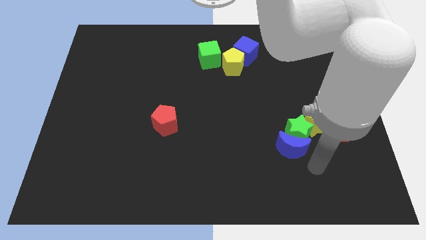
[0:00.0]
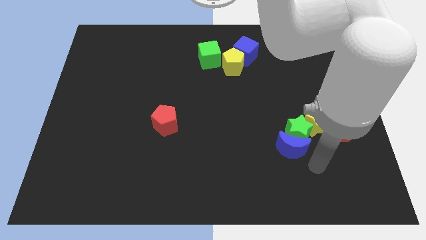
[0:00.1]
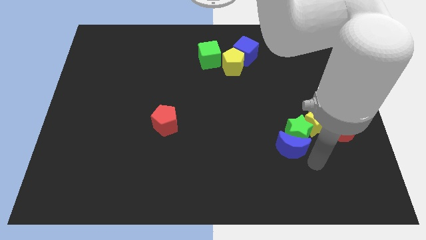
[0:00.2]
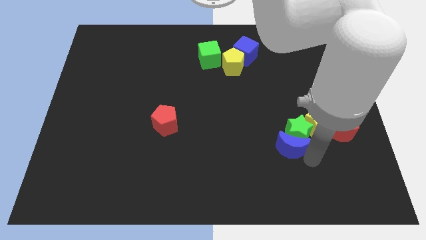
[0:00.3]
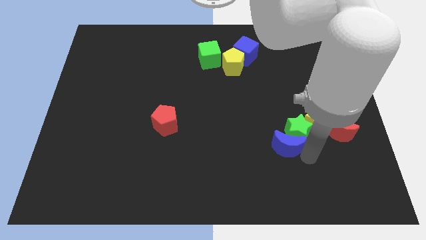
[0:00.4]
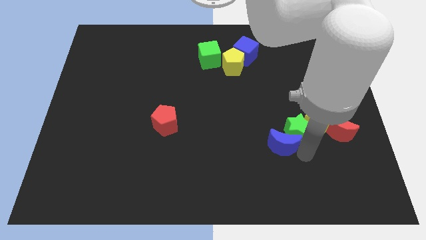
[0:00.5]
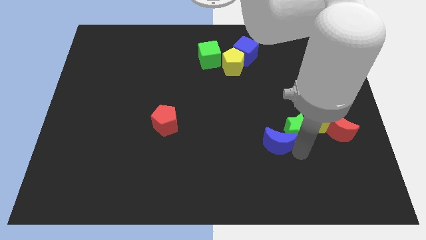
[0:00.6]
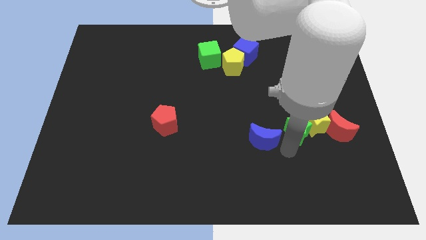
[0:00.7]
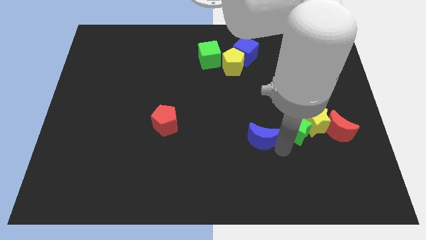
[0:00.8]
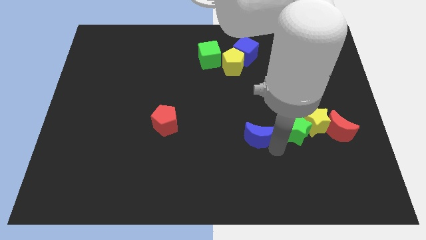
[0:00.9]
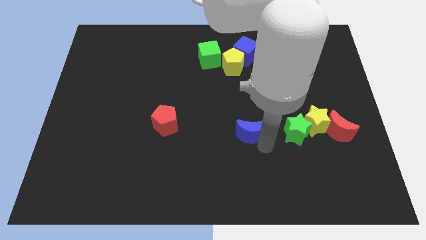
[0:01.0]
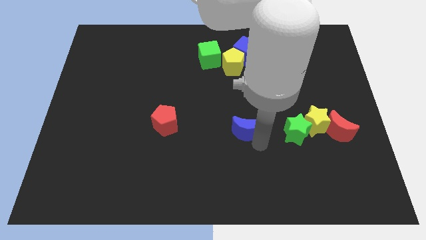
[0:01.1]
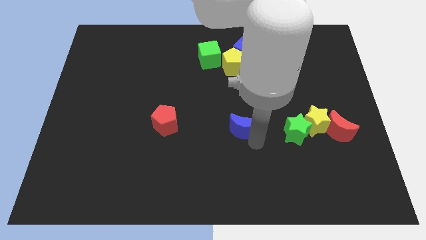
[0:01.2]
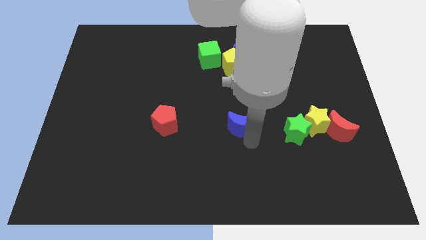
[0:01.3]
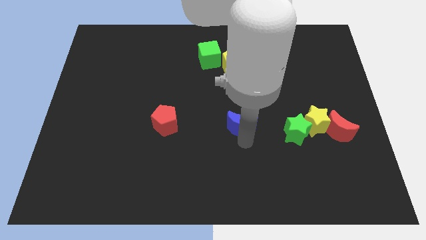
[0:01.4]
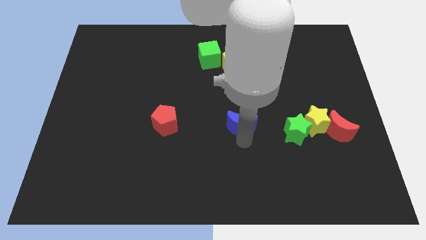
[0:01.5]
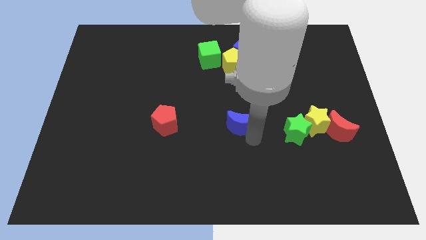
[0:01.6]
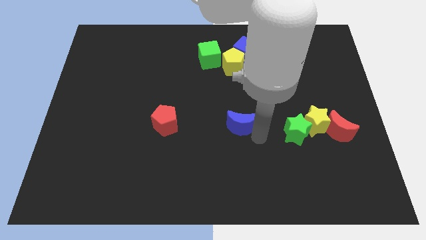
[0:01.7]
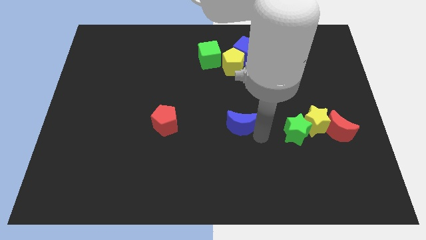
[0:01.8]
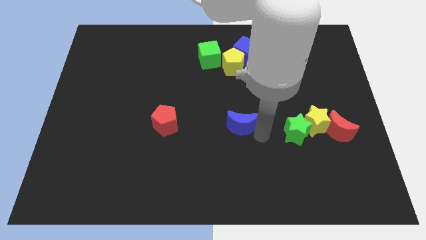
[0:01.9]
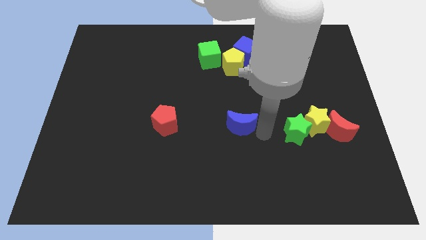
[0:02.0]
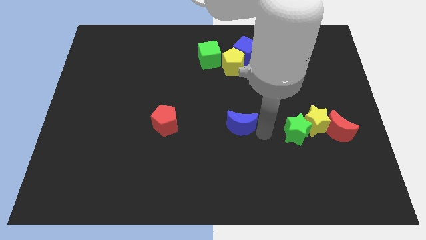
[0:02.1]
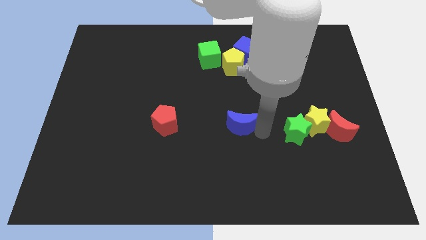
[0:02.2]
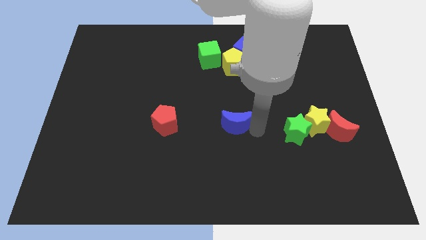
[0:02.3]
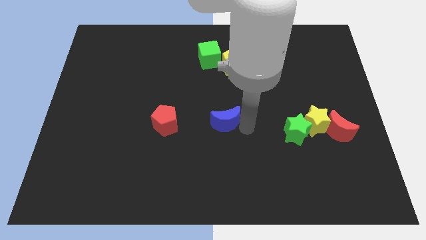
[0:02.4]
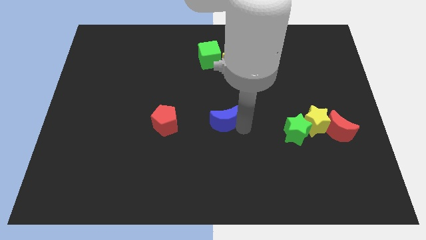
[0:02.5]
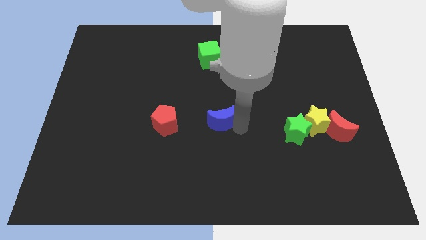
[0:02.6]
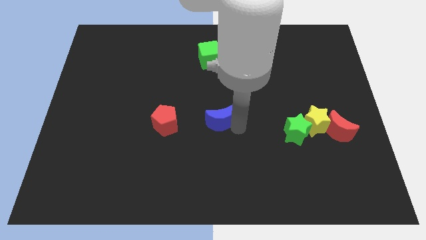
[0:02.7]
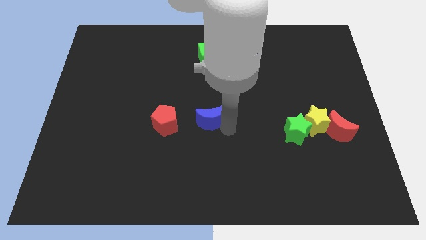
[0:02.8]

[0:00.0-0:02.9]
place blue moon to the right of red pentagon

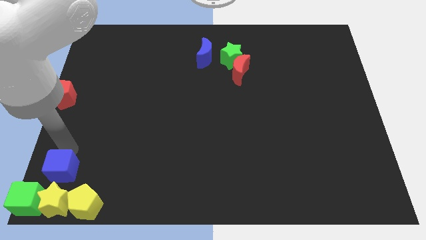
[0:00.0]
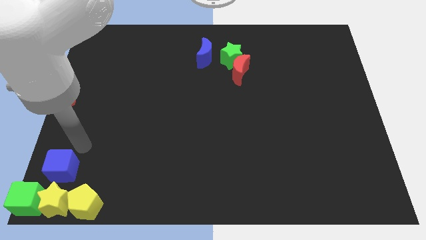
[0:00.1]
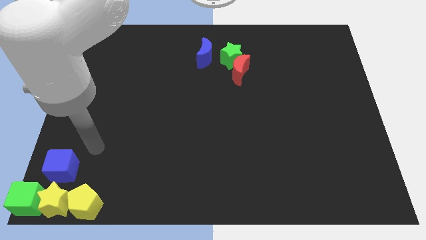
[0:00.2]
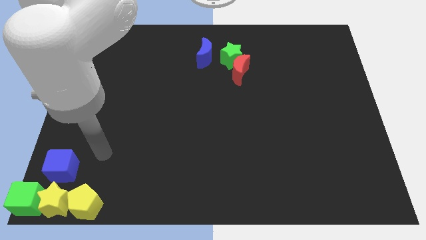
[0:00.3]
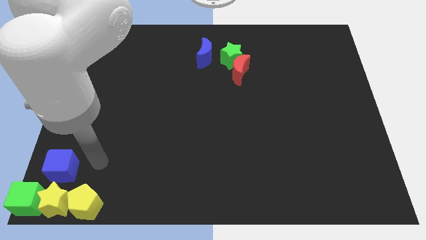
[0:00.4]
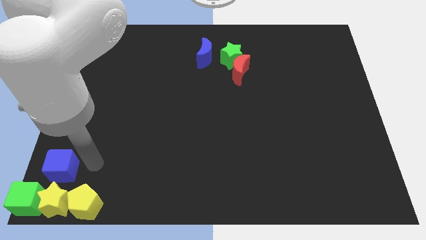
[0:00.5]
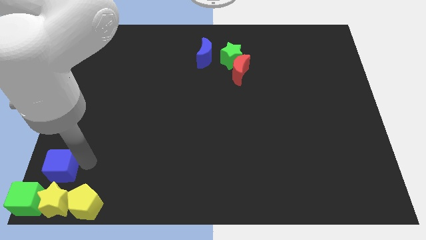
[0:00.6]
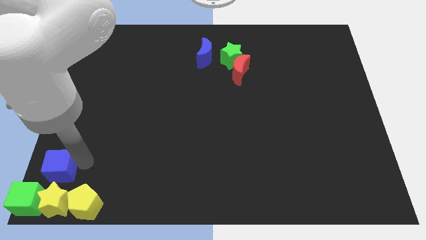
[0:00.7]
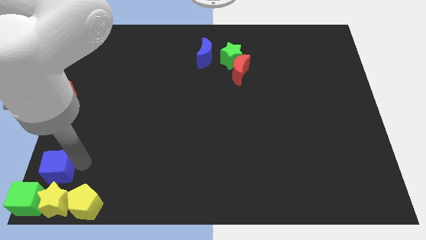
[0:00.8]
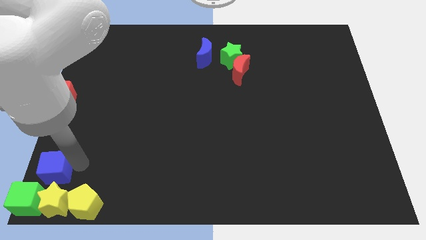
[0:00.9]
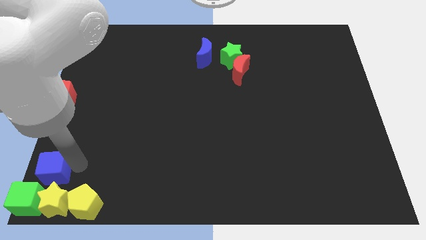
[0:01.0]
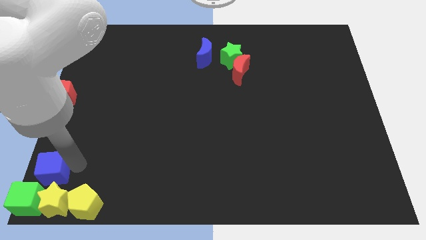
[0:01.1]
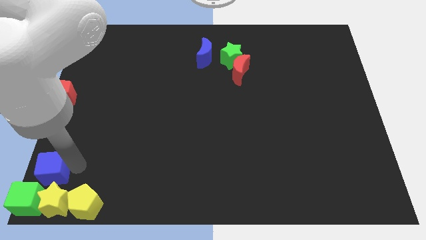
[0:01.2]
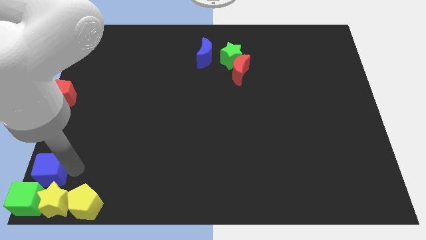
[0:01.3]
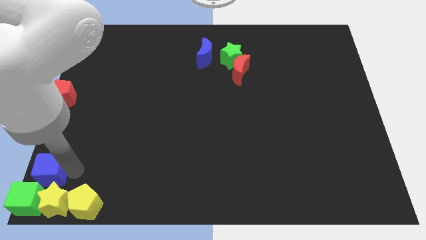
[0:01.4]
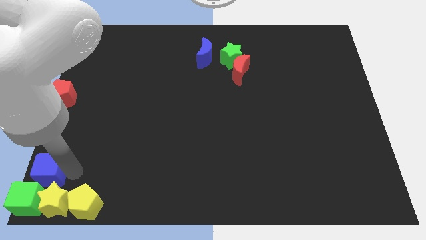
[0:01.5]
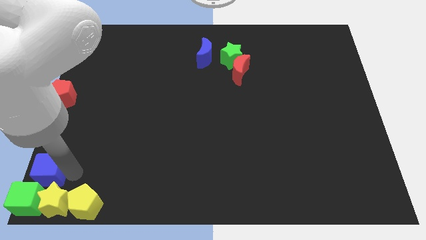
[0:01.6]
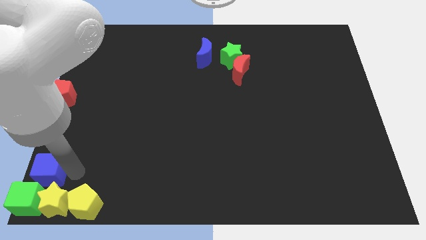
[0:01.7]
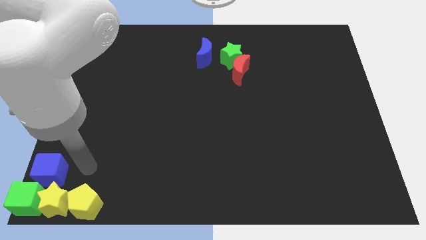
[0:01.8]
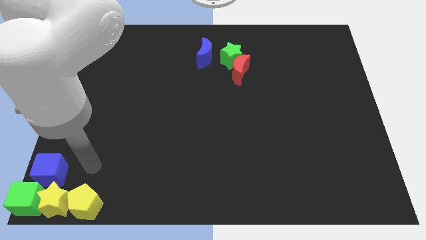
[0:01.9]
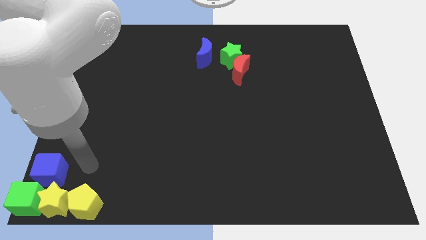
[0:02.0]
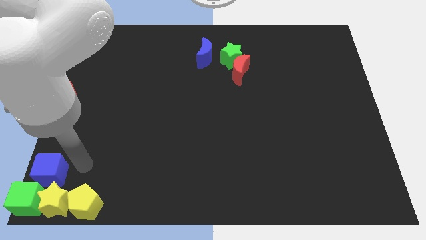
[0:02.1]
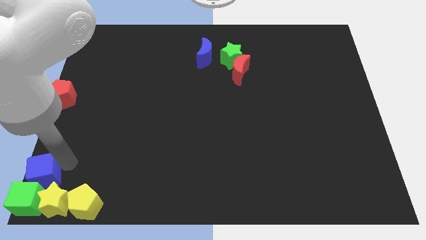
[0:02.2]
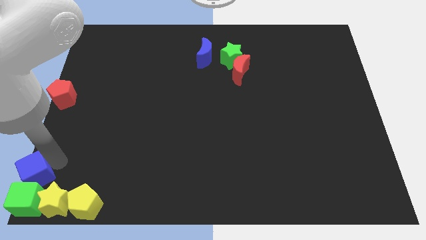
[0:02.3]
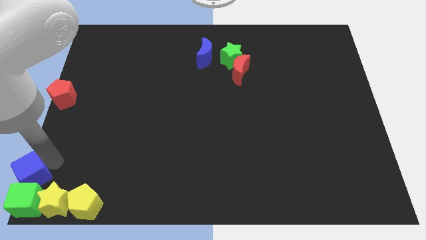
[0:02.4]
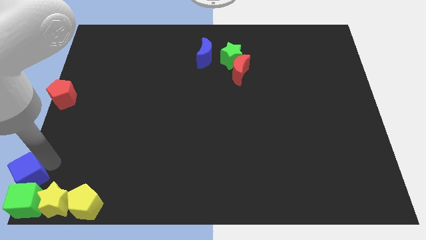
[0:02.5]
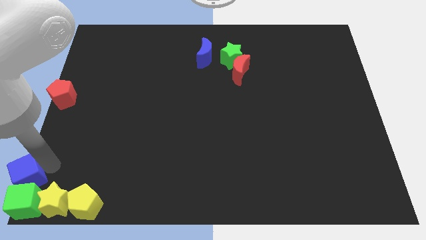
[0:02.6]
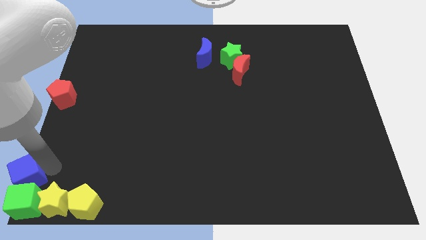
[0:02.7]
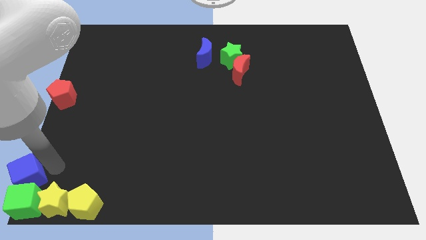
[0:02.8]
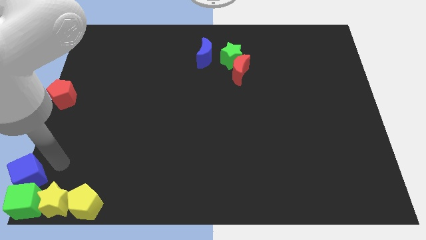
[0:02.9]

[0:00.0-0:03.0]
push the blue cube to the top of the green cube

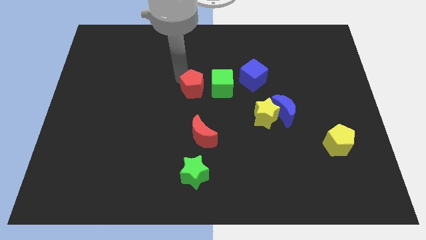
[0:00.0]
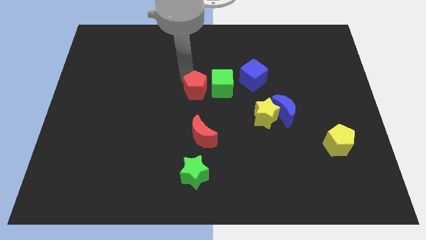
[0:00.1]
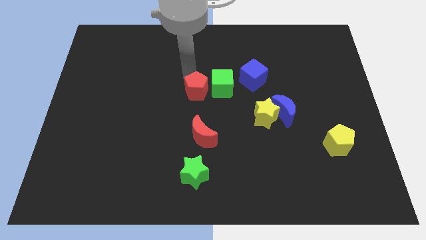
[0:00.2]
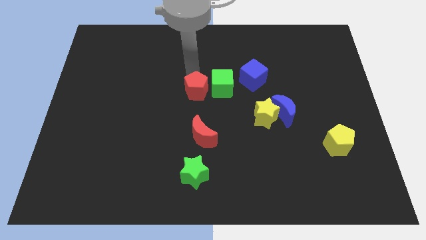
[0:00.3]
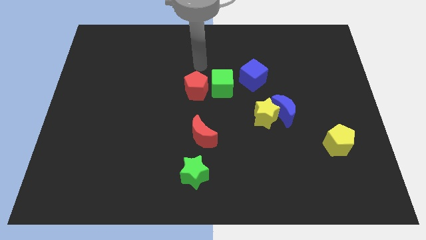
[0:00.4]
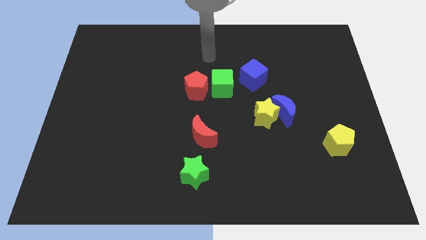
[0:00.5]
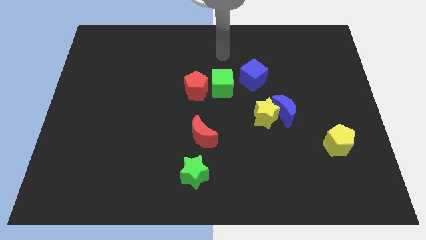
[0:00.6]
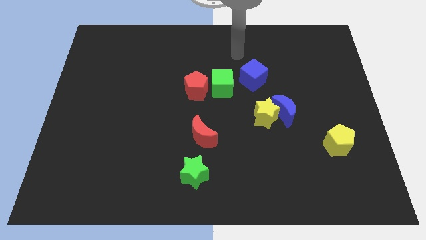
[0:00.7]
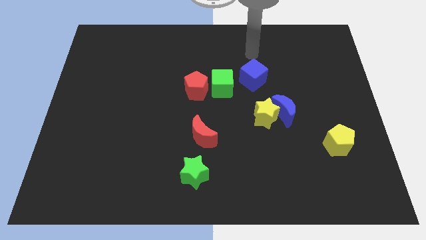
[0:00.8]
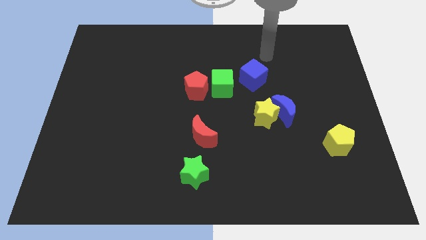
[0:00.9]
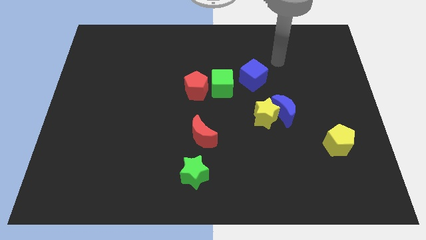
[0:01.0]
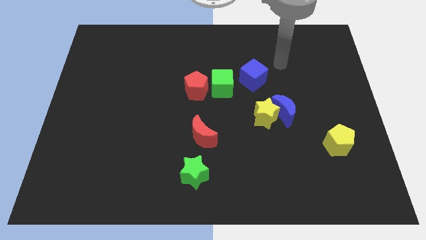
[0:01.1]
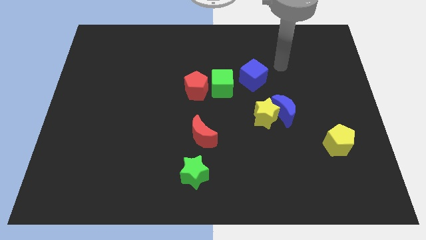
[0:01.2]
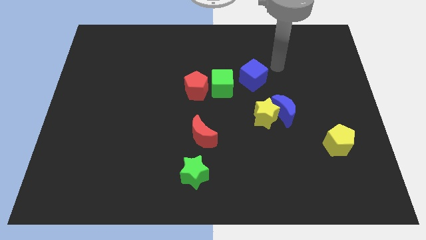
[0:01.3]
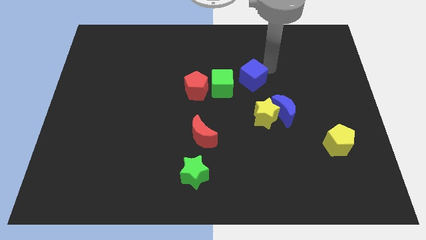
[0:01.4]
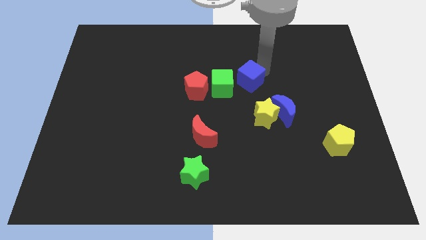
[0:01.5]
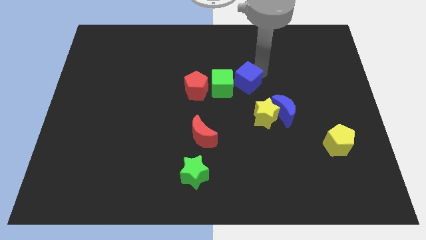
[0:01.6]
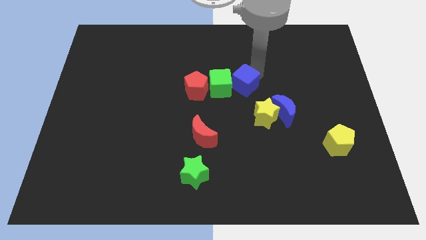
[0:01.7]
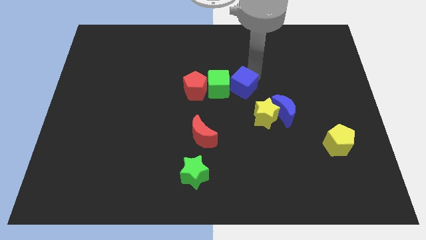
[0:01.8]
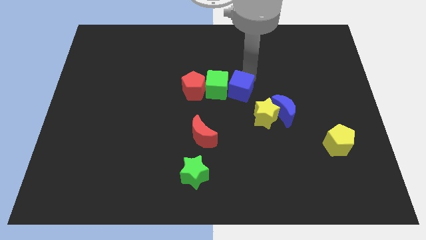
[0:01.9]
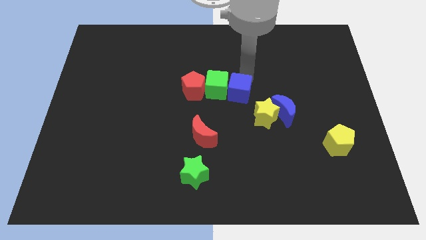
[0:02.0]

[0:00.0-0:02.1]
move blue cube right beside green cube

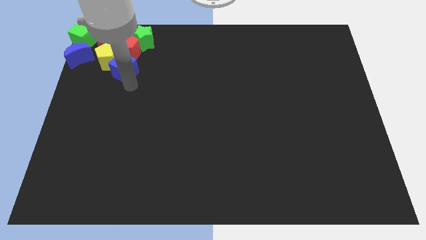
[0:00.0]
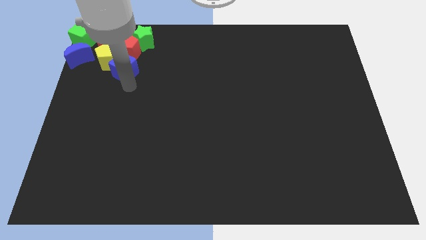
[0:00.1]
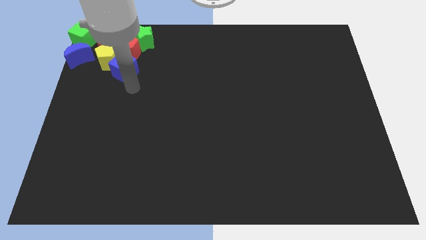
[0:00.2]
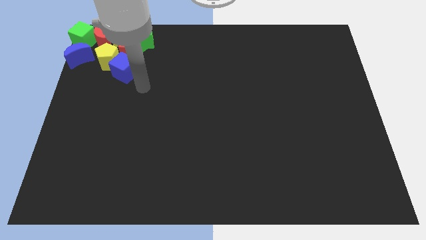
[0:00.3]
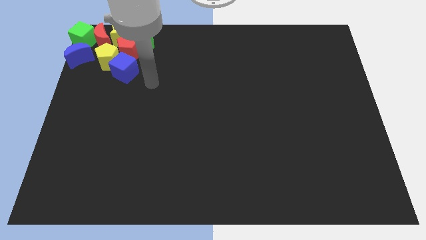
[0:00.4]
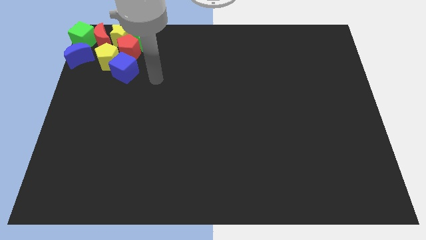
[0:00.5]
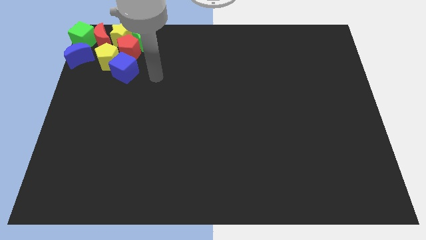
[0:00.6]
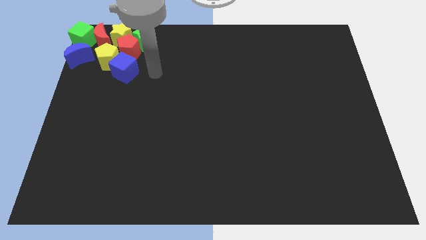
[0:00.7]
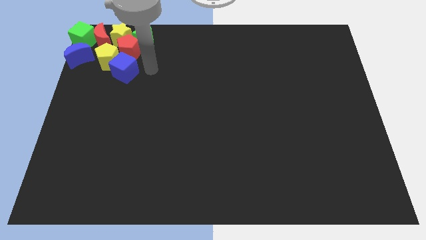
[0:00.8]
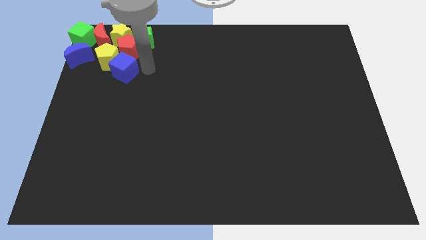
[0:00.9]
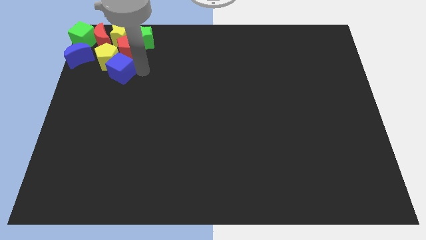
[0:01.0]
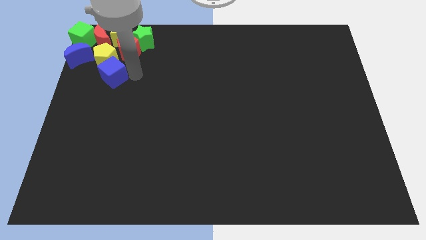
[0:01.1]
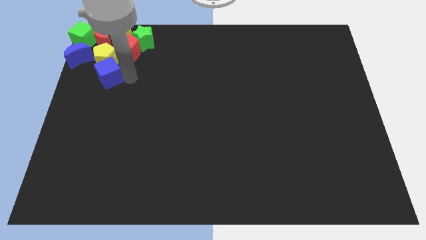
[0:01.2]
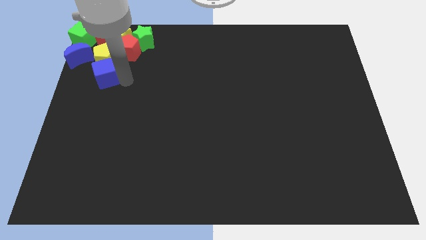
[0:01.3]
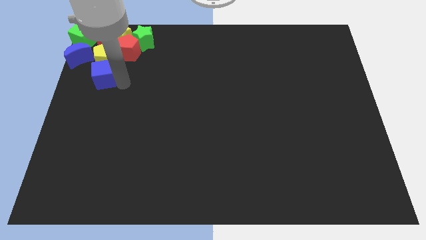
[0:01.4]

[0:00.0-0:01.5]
move the blue cube at the bottom side of the yellow pentagon
